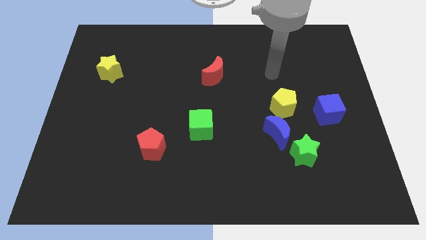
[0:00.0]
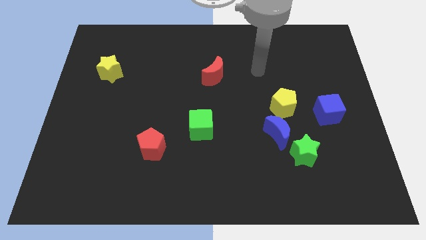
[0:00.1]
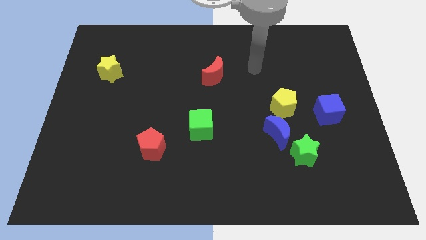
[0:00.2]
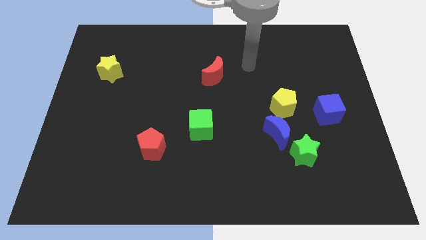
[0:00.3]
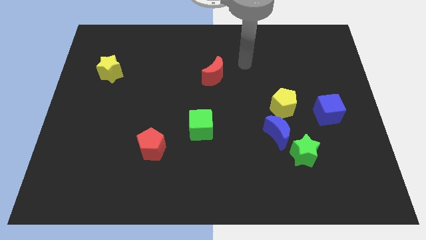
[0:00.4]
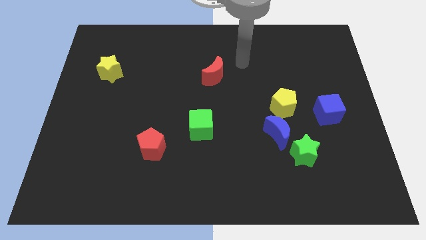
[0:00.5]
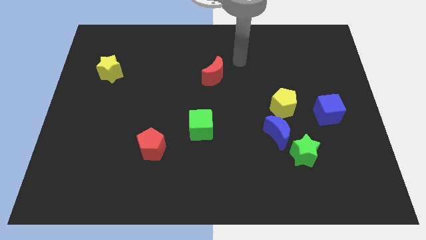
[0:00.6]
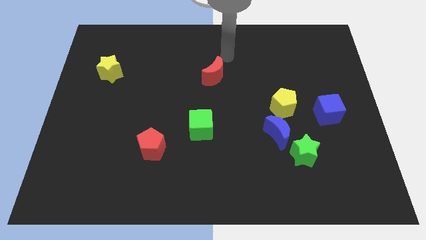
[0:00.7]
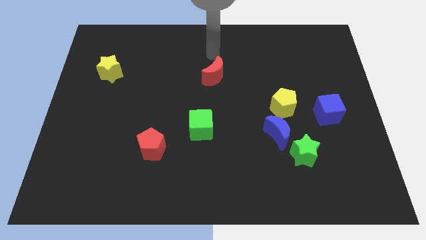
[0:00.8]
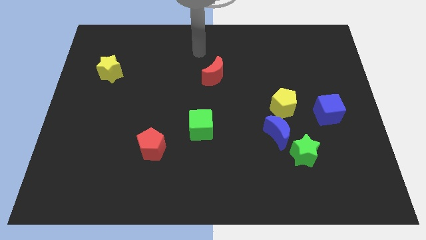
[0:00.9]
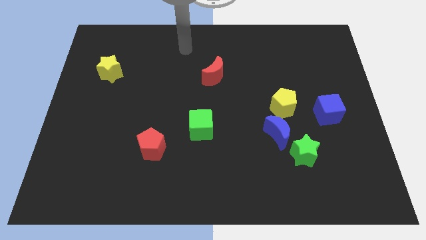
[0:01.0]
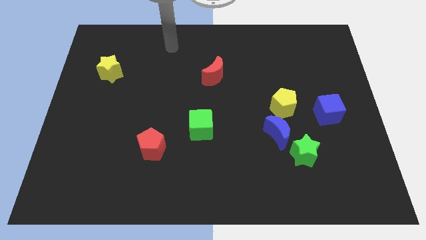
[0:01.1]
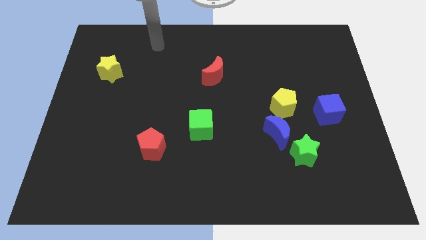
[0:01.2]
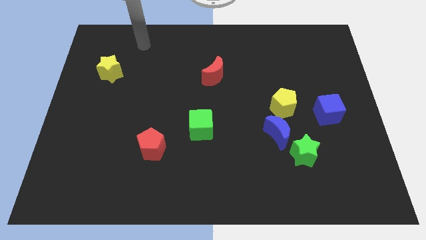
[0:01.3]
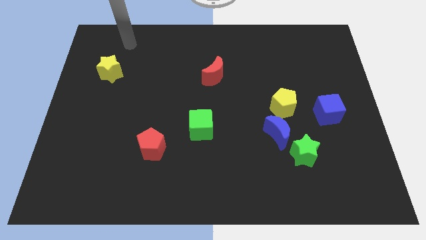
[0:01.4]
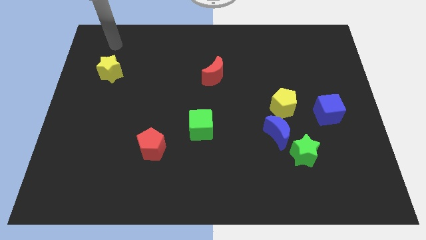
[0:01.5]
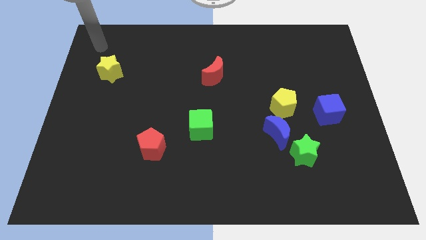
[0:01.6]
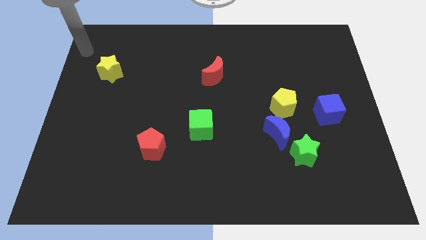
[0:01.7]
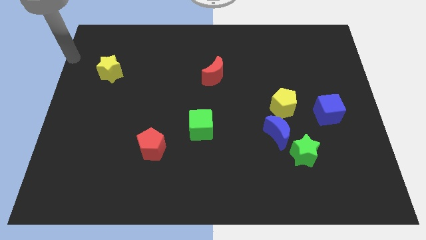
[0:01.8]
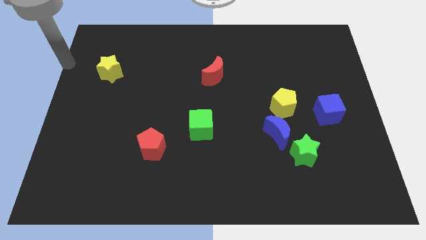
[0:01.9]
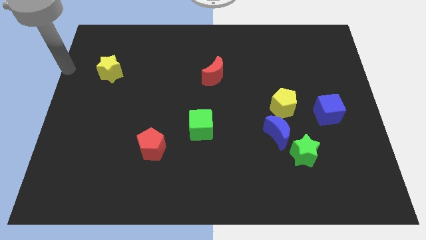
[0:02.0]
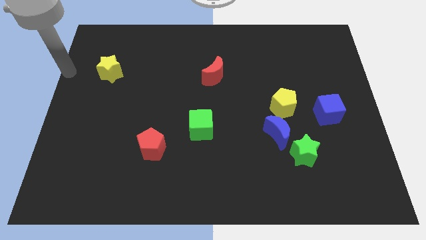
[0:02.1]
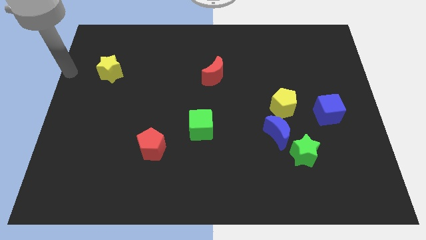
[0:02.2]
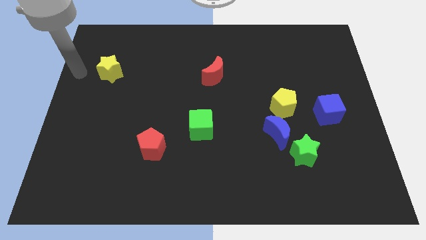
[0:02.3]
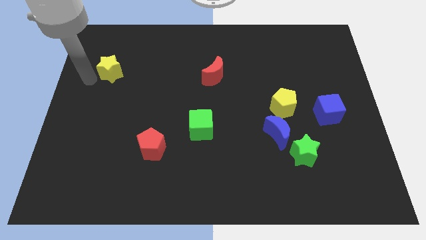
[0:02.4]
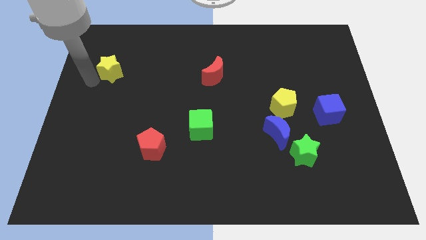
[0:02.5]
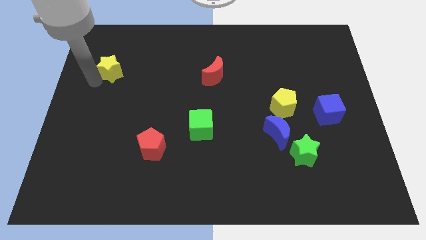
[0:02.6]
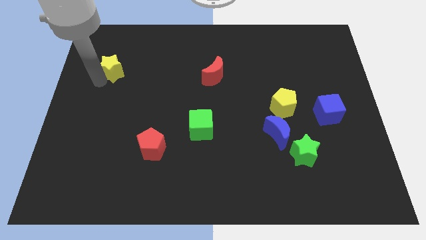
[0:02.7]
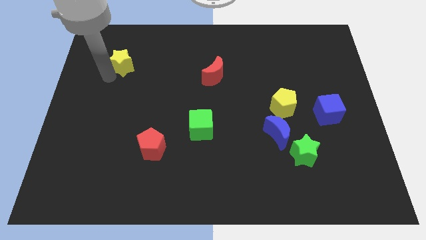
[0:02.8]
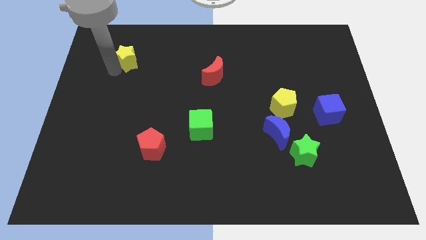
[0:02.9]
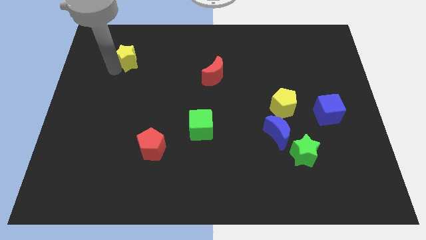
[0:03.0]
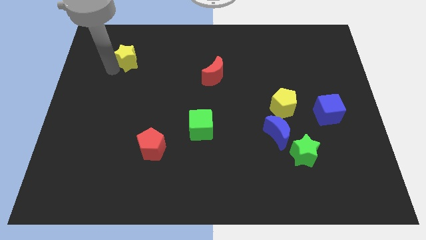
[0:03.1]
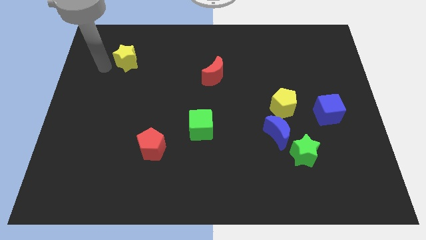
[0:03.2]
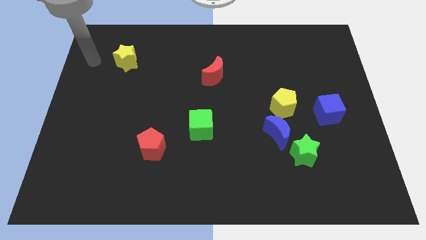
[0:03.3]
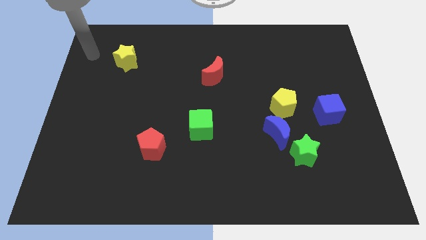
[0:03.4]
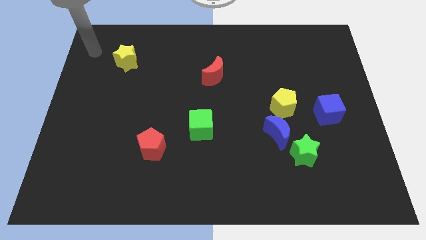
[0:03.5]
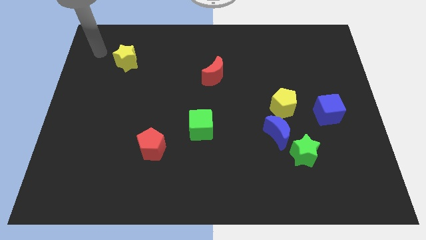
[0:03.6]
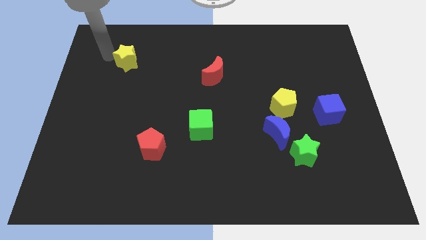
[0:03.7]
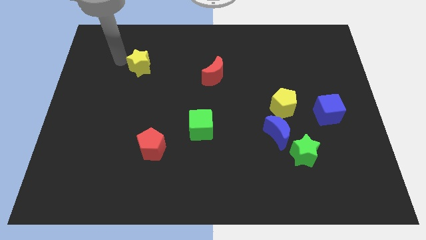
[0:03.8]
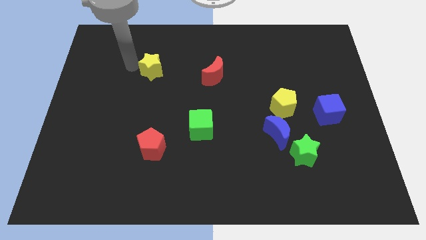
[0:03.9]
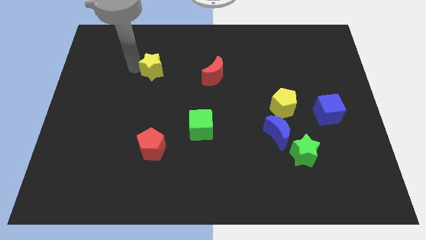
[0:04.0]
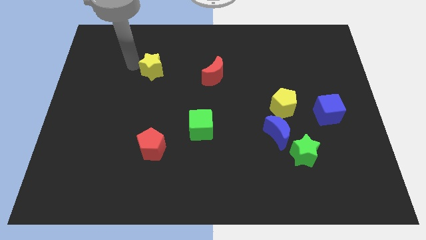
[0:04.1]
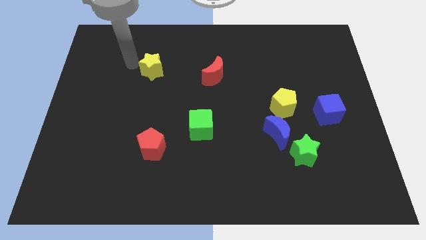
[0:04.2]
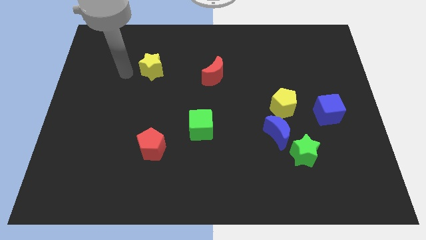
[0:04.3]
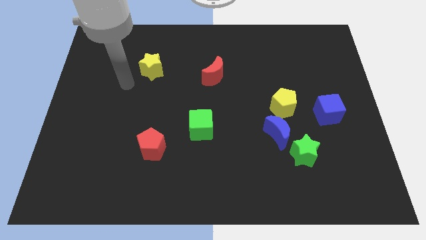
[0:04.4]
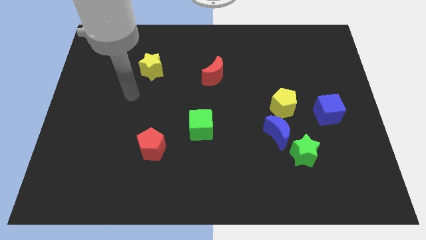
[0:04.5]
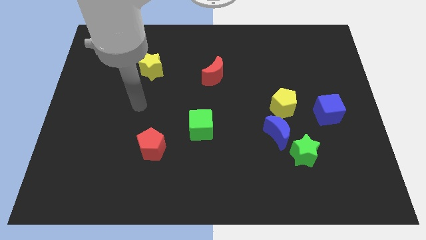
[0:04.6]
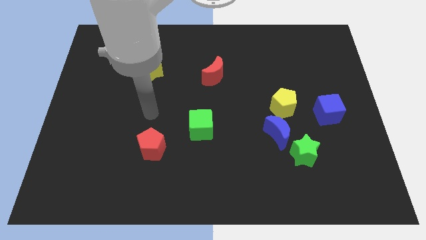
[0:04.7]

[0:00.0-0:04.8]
place the yellow star horizontally to the red moon

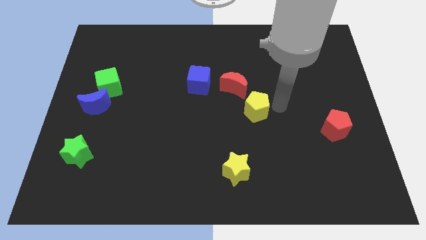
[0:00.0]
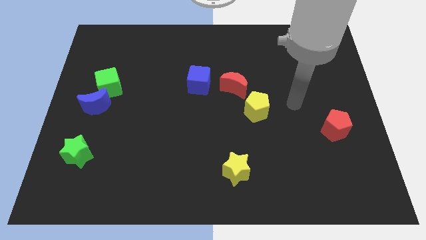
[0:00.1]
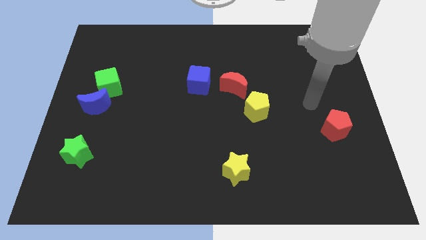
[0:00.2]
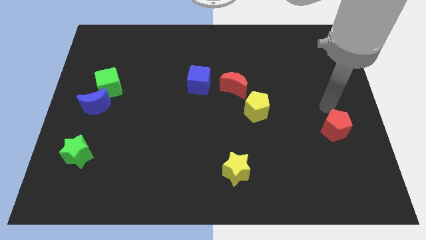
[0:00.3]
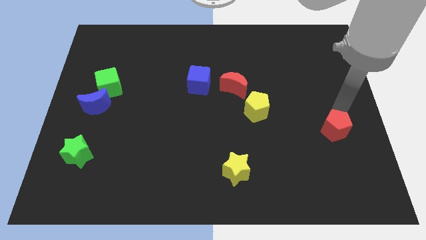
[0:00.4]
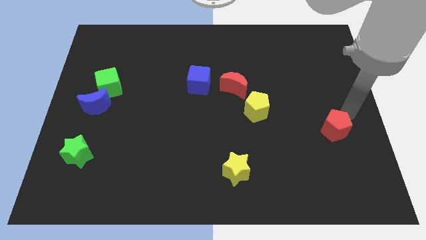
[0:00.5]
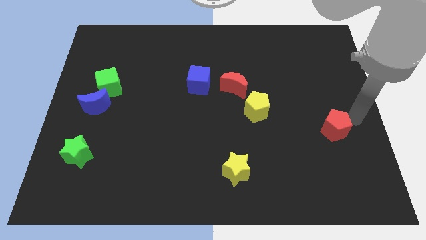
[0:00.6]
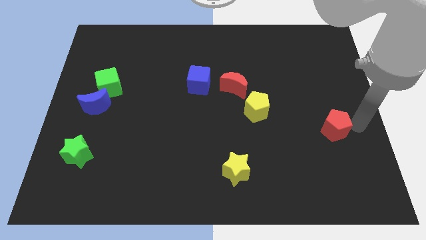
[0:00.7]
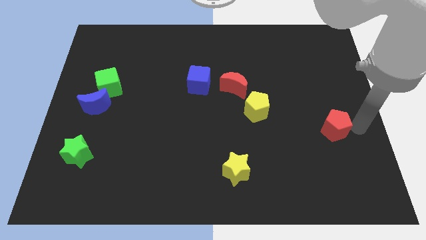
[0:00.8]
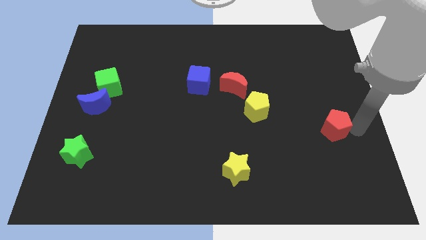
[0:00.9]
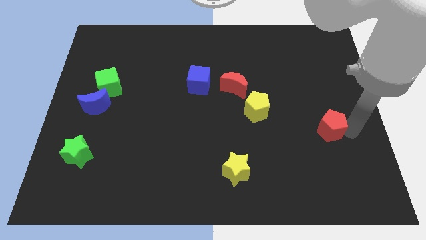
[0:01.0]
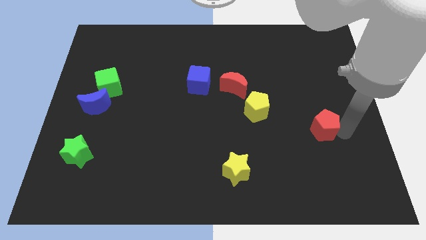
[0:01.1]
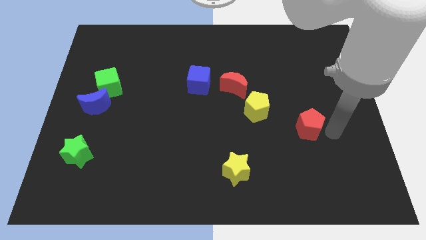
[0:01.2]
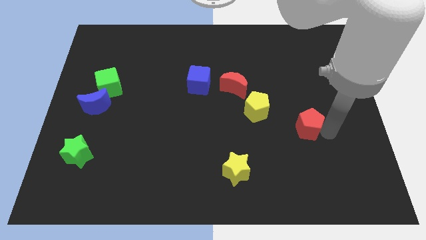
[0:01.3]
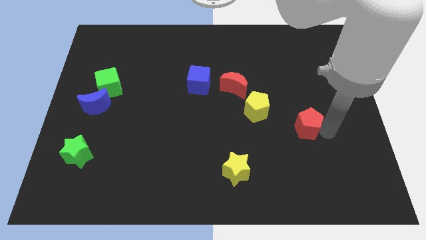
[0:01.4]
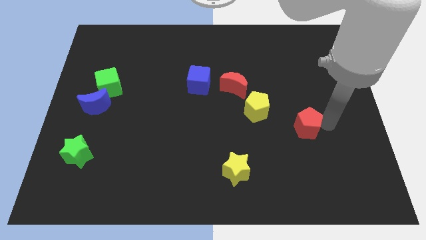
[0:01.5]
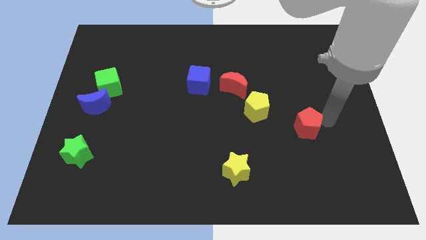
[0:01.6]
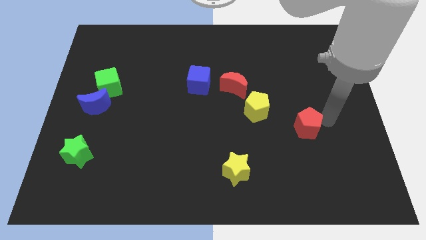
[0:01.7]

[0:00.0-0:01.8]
drag the red pentagon towards the yellow pentagon

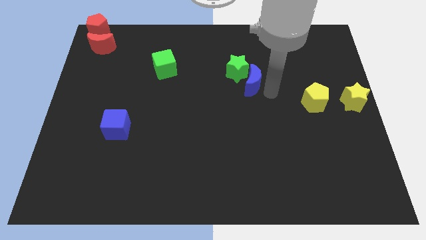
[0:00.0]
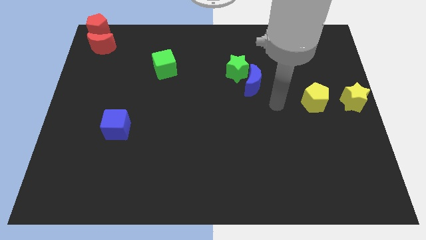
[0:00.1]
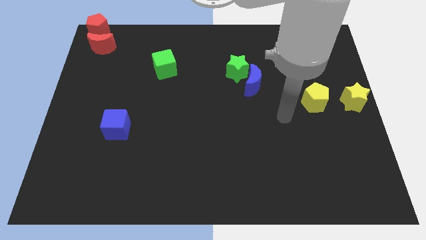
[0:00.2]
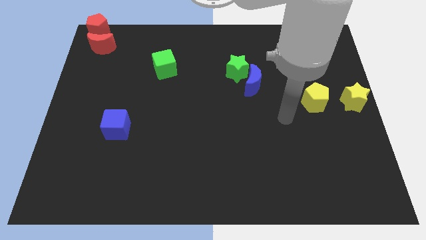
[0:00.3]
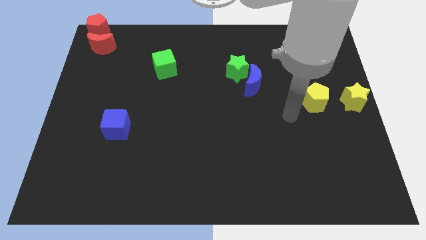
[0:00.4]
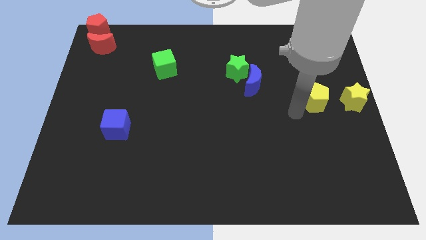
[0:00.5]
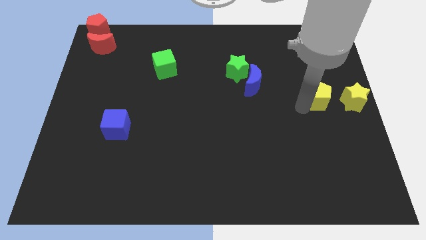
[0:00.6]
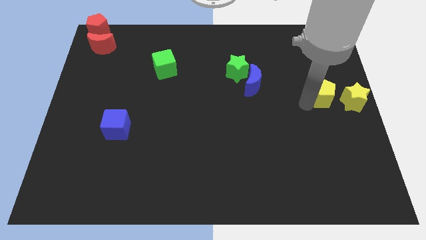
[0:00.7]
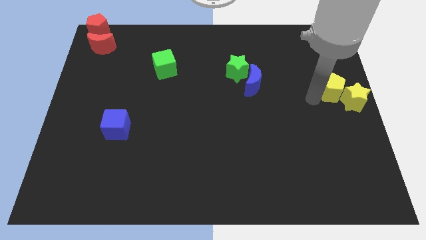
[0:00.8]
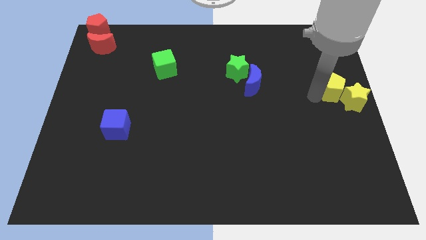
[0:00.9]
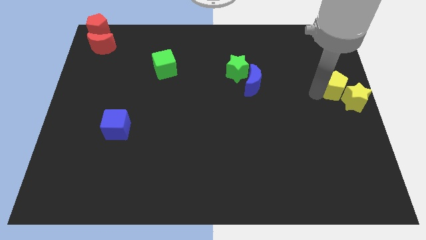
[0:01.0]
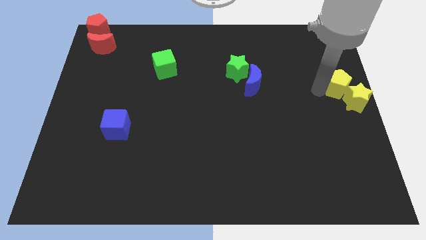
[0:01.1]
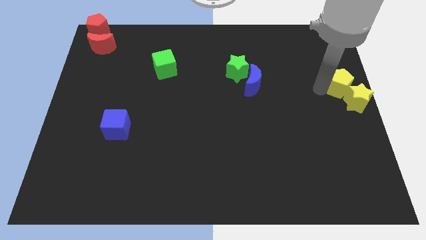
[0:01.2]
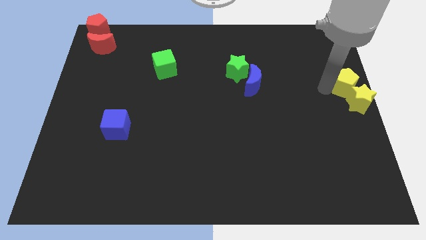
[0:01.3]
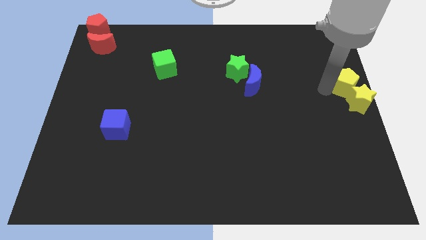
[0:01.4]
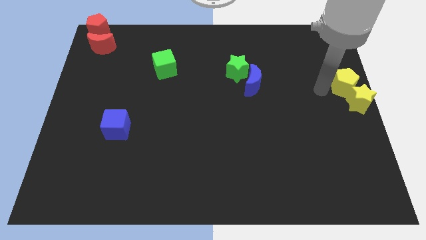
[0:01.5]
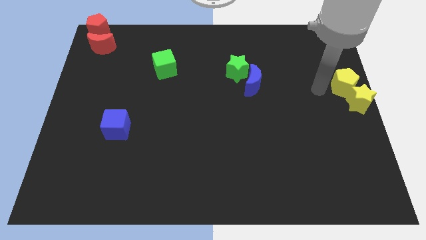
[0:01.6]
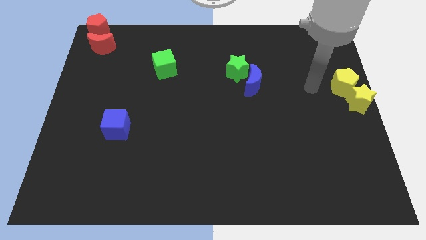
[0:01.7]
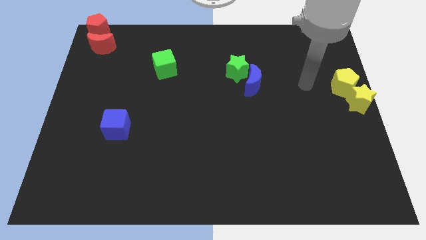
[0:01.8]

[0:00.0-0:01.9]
push the yellow pentagon into the yellow star

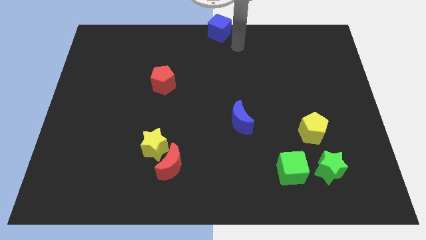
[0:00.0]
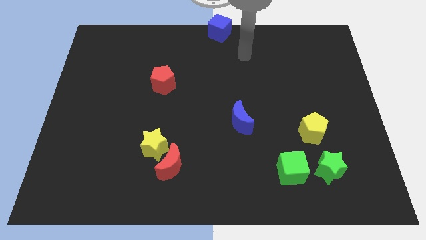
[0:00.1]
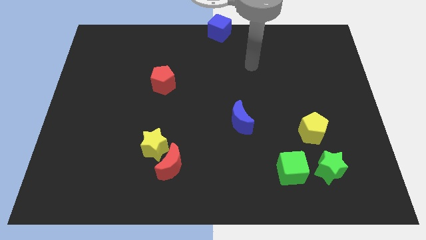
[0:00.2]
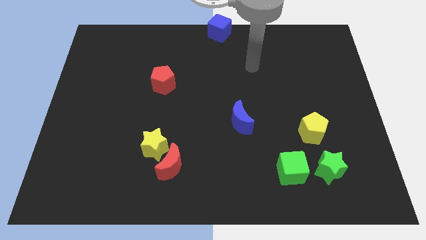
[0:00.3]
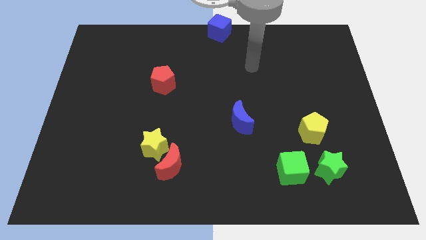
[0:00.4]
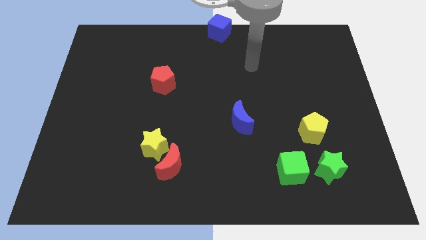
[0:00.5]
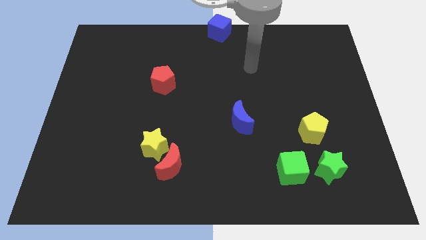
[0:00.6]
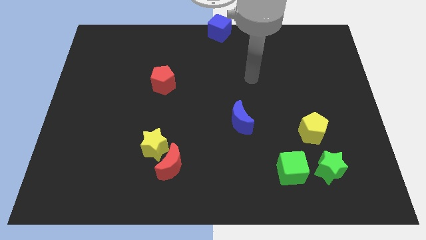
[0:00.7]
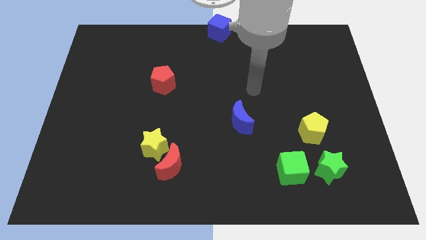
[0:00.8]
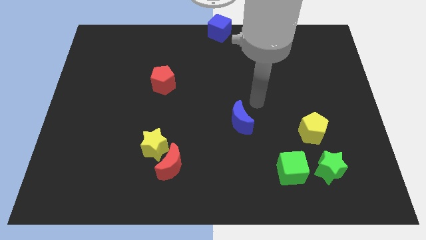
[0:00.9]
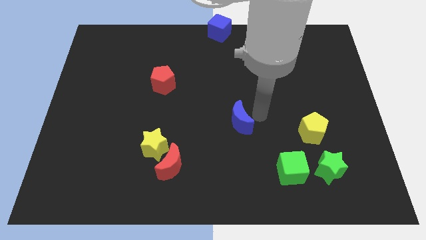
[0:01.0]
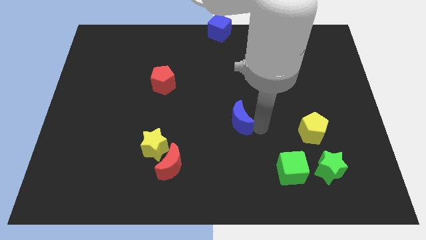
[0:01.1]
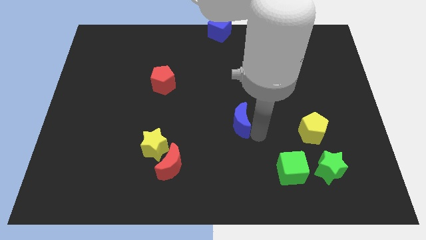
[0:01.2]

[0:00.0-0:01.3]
point your arm at the right of the blue crescent
